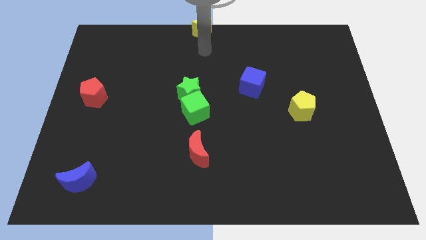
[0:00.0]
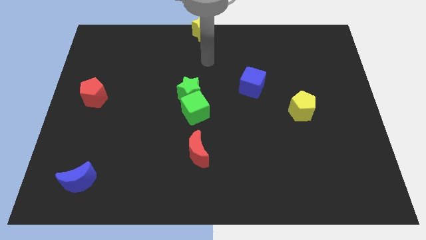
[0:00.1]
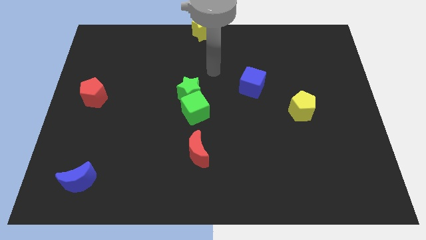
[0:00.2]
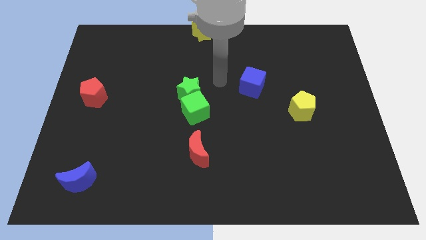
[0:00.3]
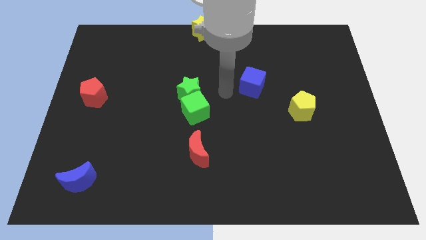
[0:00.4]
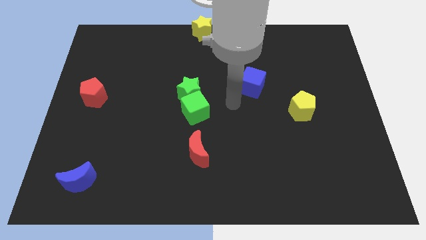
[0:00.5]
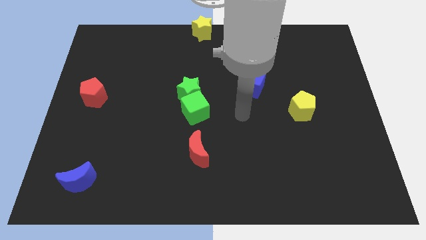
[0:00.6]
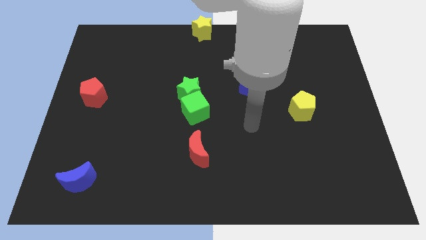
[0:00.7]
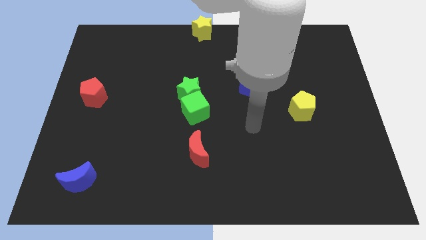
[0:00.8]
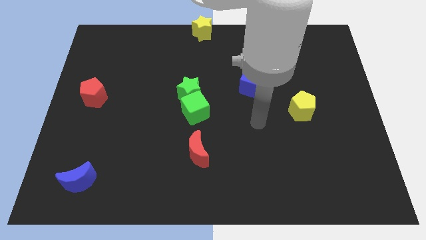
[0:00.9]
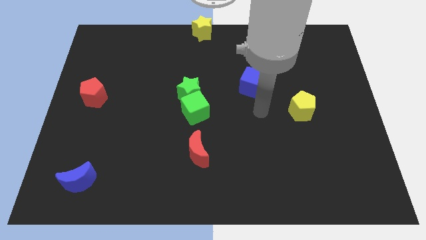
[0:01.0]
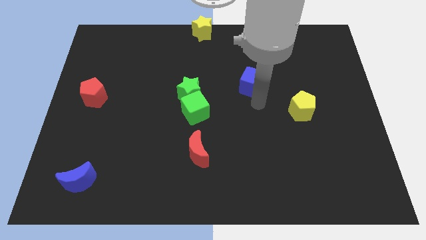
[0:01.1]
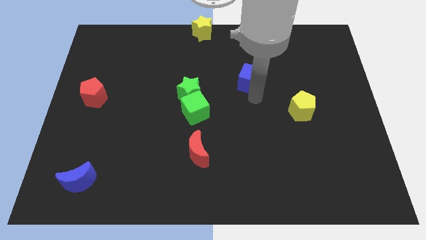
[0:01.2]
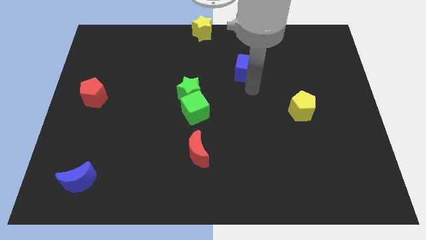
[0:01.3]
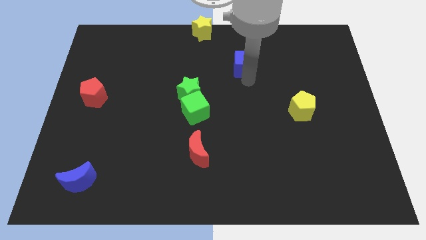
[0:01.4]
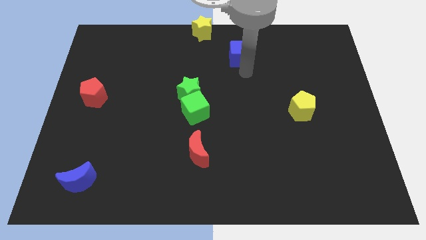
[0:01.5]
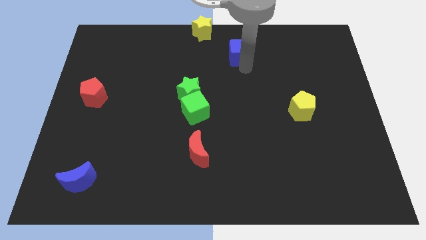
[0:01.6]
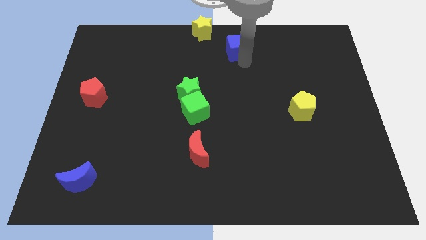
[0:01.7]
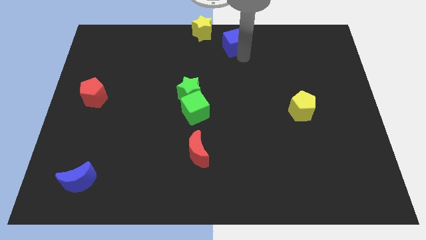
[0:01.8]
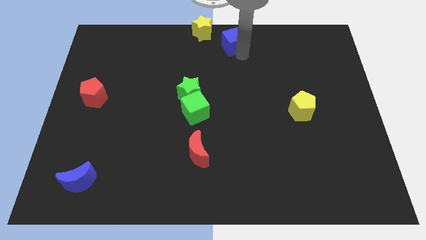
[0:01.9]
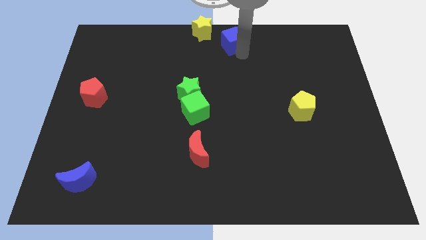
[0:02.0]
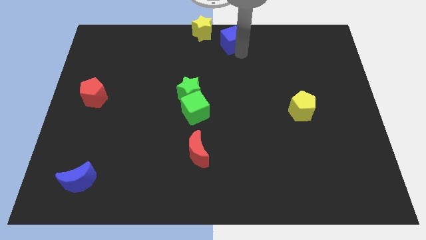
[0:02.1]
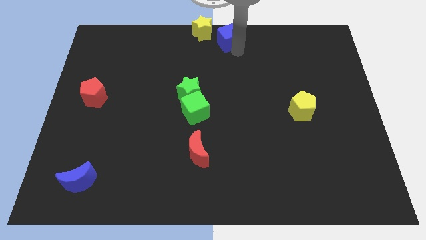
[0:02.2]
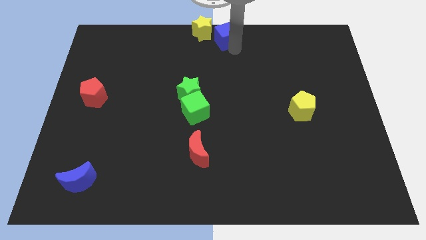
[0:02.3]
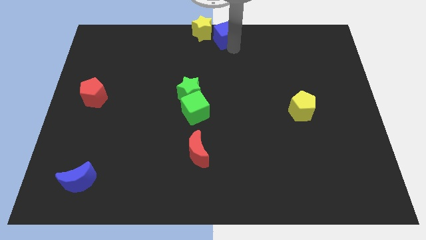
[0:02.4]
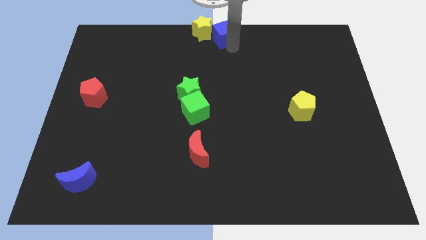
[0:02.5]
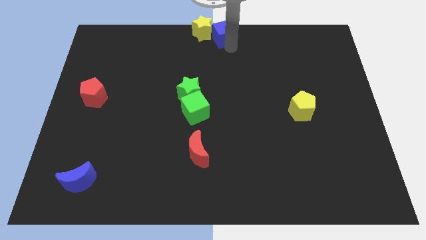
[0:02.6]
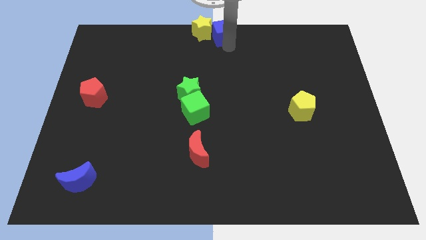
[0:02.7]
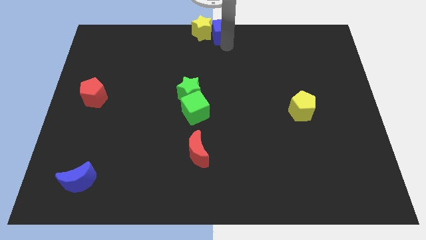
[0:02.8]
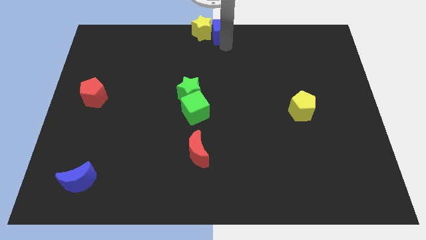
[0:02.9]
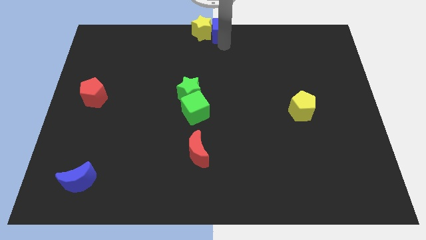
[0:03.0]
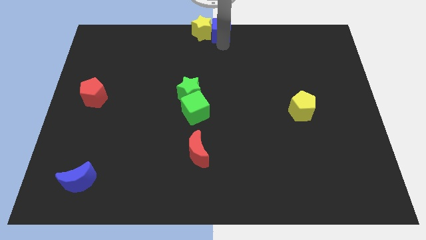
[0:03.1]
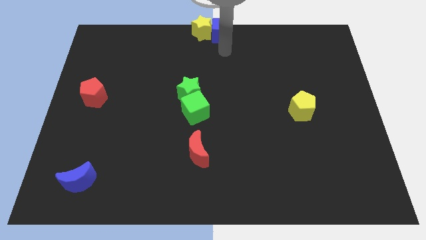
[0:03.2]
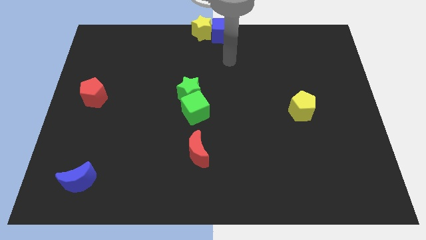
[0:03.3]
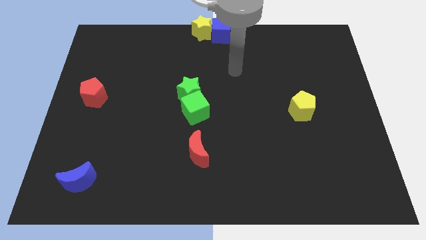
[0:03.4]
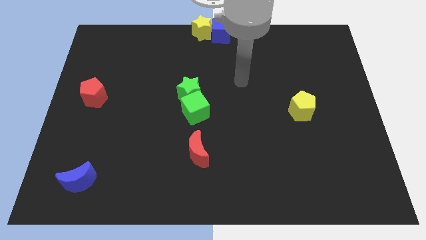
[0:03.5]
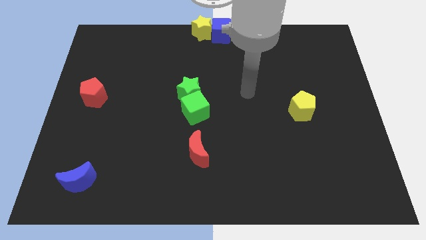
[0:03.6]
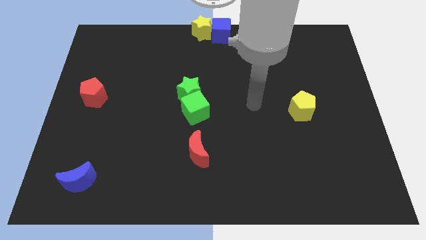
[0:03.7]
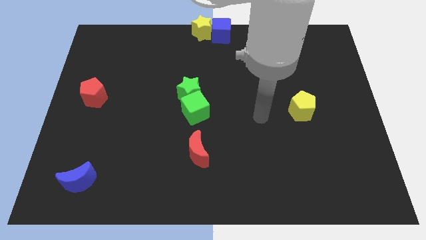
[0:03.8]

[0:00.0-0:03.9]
push the blue cube to the right of the yellow star

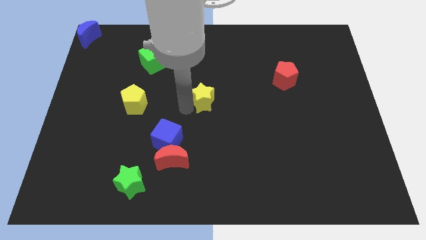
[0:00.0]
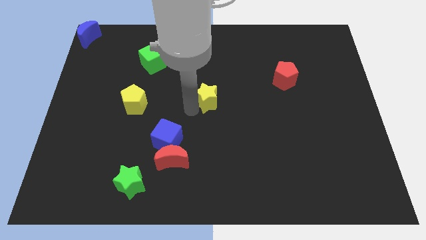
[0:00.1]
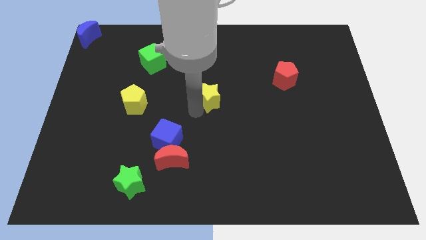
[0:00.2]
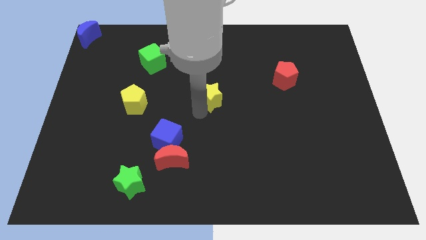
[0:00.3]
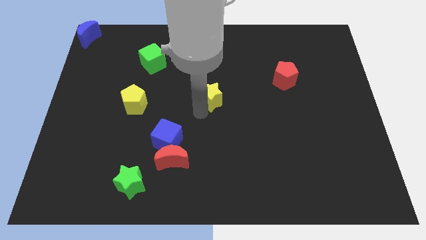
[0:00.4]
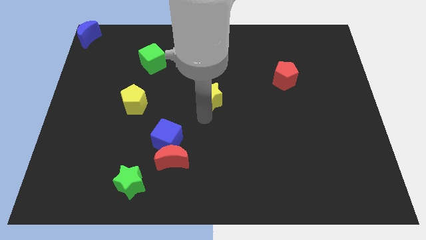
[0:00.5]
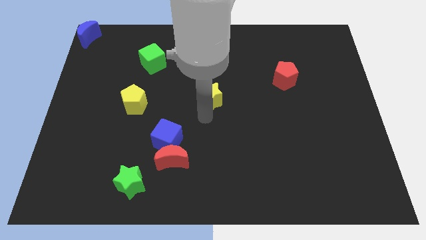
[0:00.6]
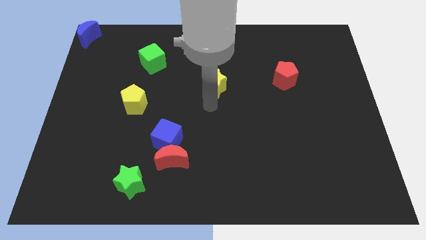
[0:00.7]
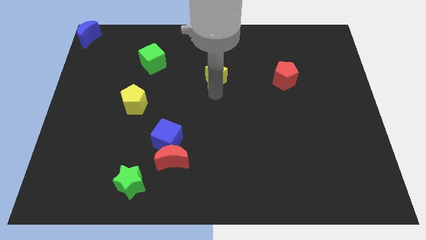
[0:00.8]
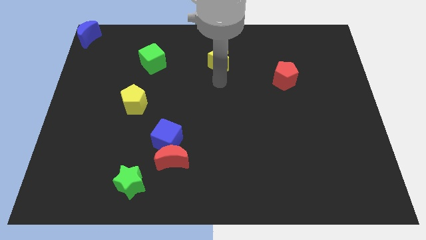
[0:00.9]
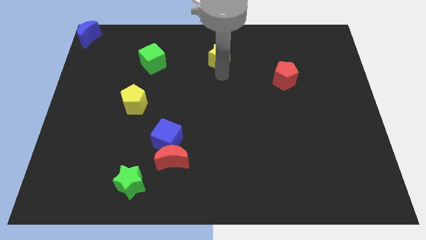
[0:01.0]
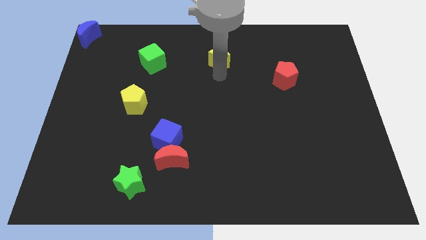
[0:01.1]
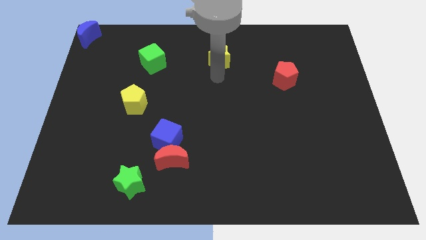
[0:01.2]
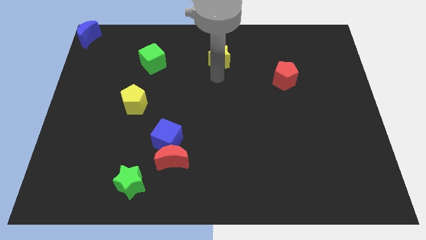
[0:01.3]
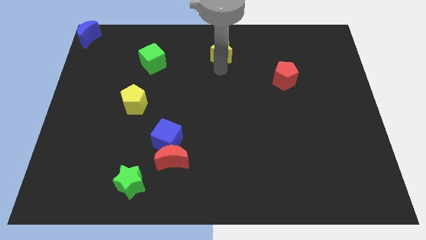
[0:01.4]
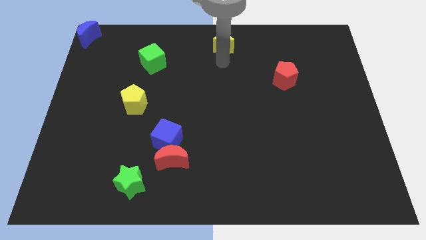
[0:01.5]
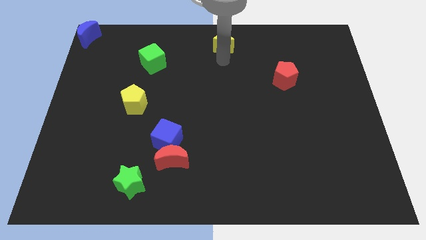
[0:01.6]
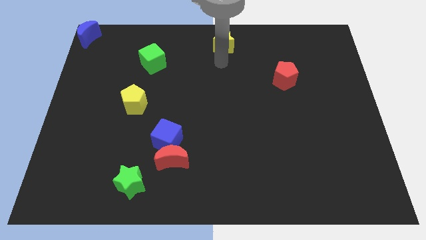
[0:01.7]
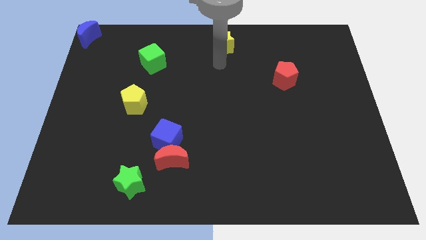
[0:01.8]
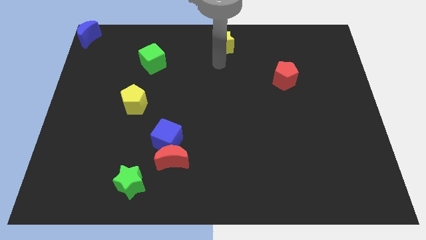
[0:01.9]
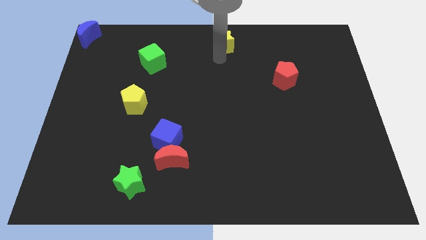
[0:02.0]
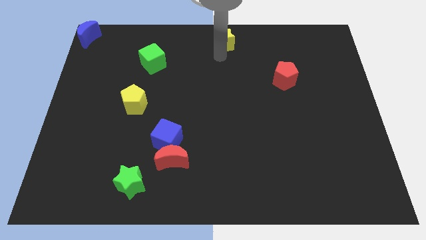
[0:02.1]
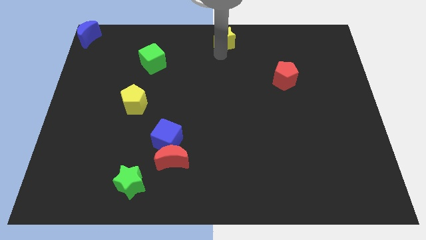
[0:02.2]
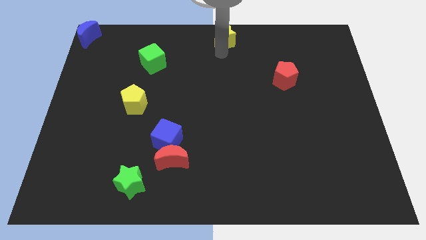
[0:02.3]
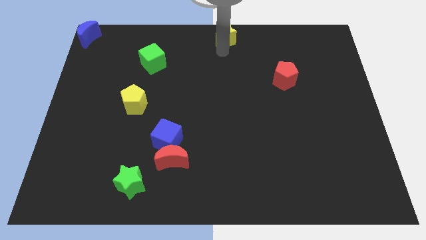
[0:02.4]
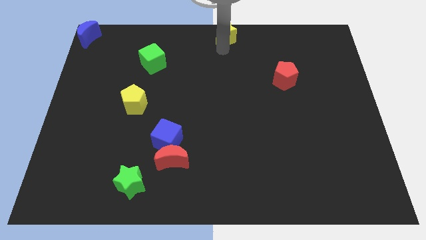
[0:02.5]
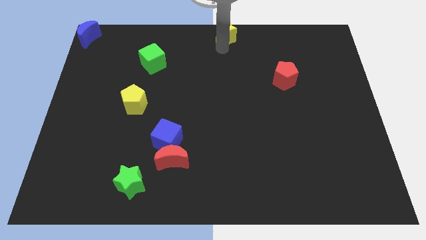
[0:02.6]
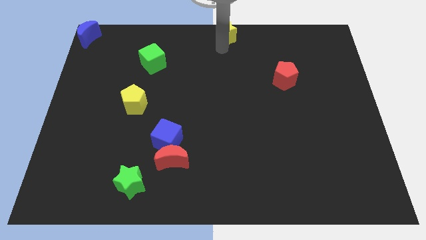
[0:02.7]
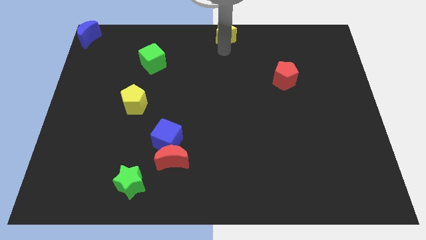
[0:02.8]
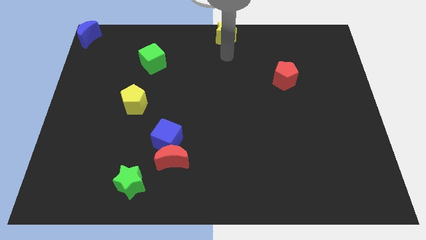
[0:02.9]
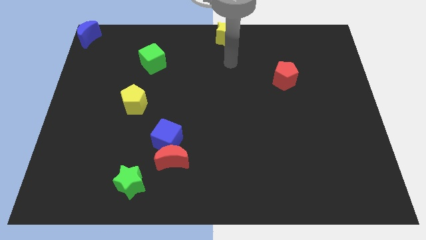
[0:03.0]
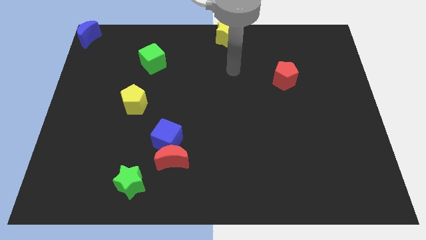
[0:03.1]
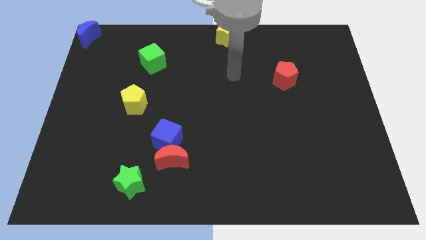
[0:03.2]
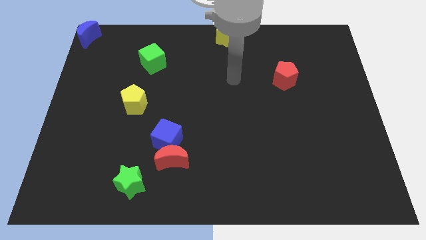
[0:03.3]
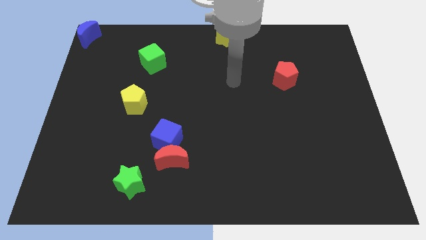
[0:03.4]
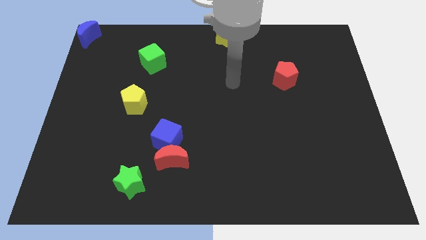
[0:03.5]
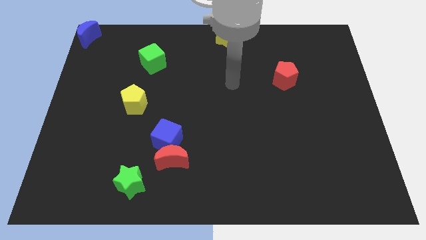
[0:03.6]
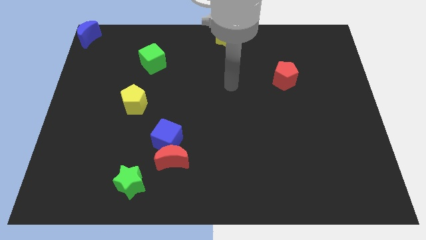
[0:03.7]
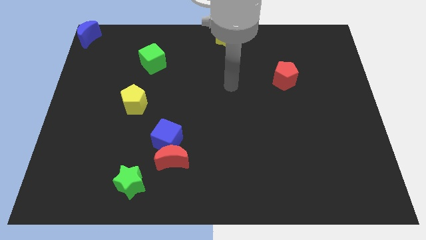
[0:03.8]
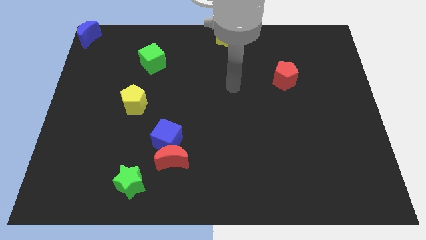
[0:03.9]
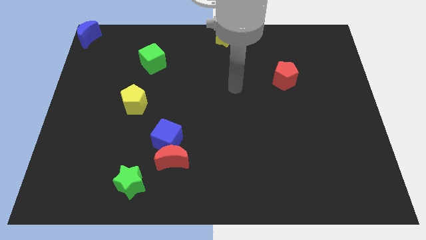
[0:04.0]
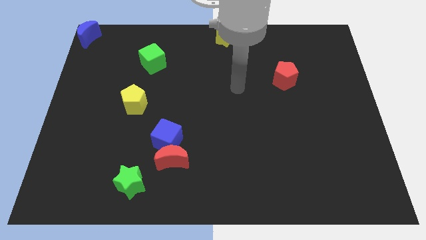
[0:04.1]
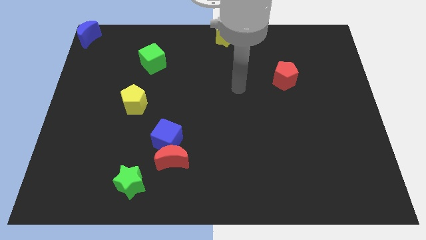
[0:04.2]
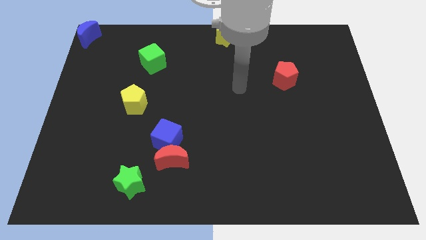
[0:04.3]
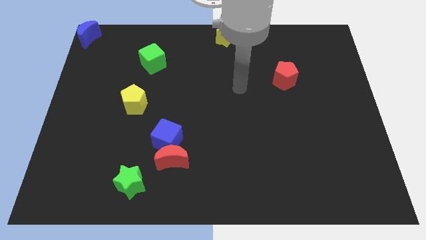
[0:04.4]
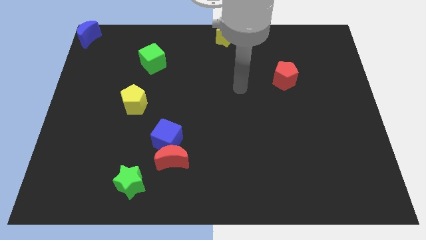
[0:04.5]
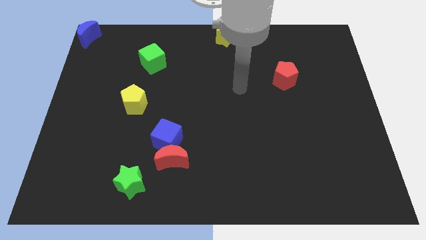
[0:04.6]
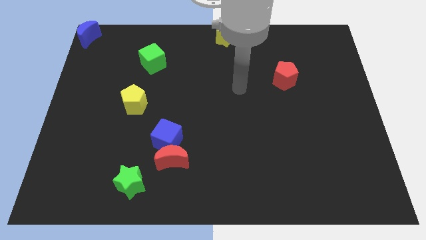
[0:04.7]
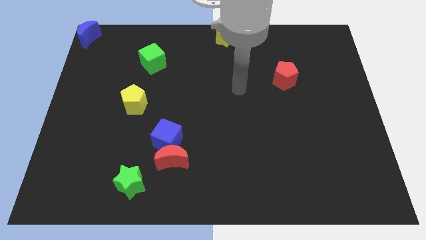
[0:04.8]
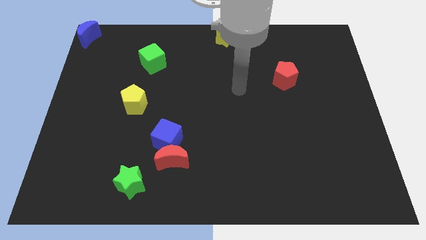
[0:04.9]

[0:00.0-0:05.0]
move the yellow star to the top center
